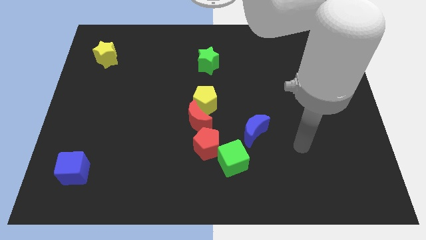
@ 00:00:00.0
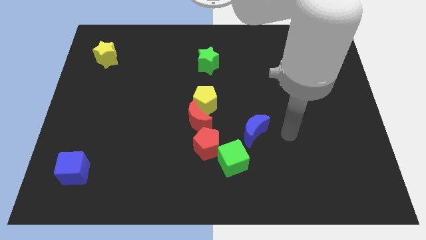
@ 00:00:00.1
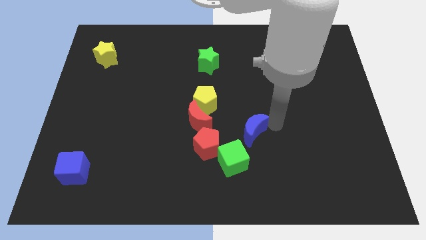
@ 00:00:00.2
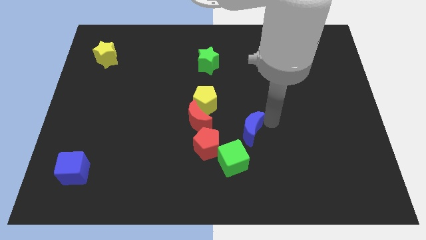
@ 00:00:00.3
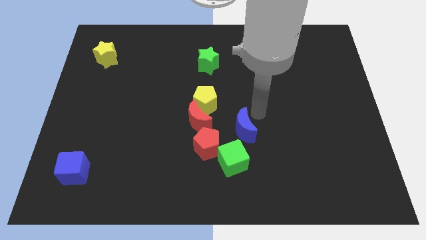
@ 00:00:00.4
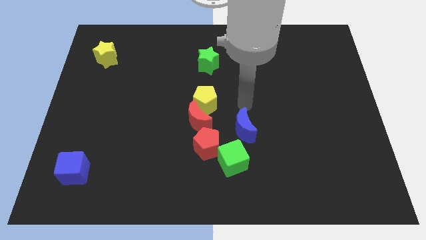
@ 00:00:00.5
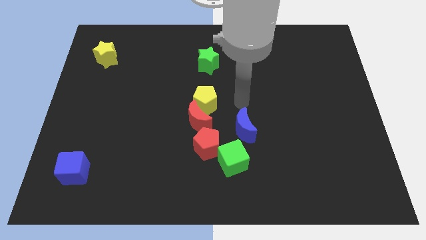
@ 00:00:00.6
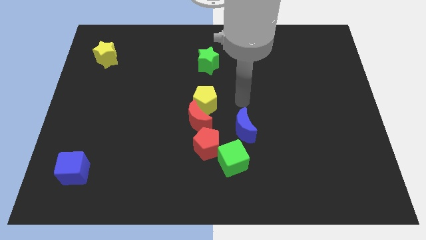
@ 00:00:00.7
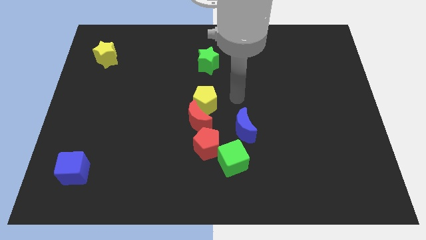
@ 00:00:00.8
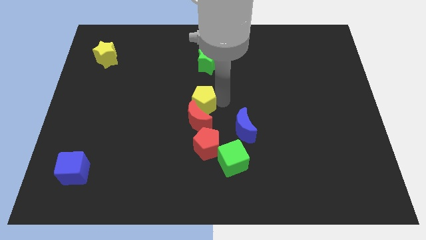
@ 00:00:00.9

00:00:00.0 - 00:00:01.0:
place the arm right to the yellow pentagon

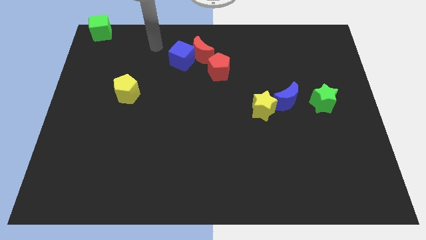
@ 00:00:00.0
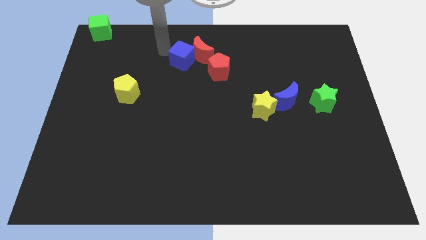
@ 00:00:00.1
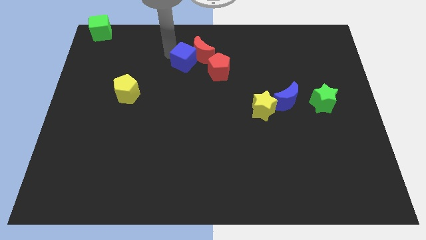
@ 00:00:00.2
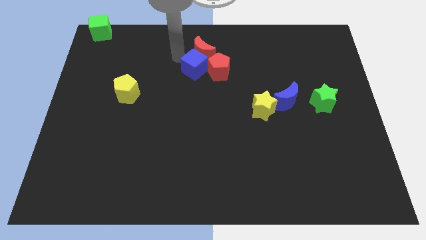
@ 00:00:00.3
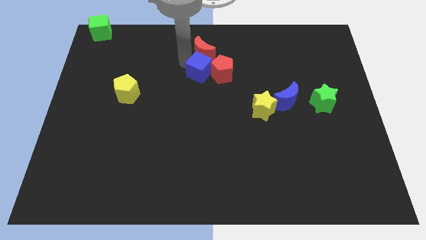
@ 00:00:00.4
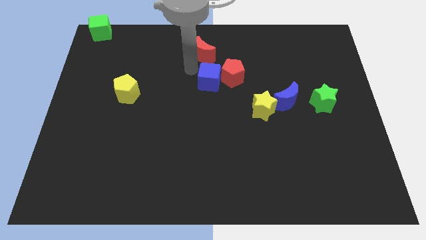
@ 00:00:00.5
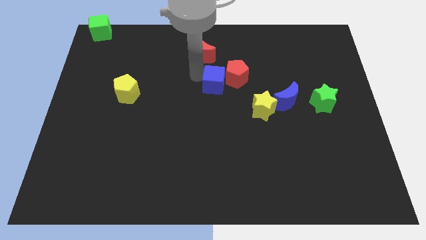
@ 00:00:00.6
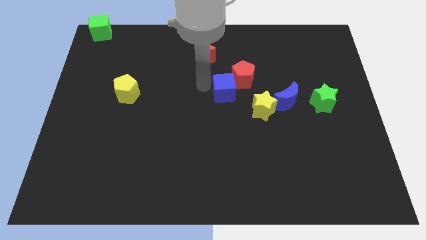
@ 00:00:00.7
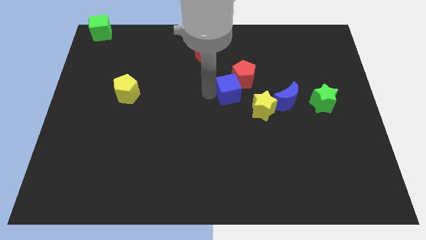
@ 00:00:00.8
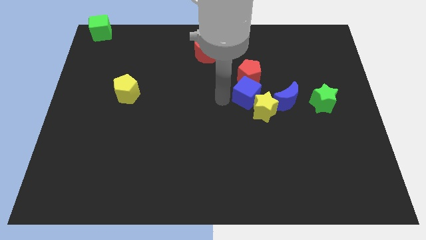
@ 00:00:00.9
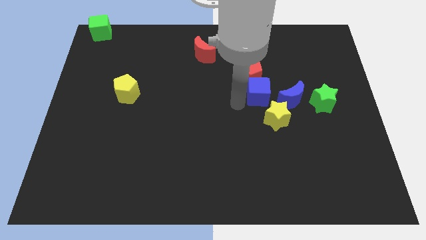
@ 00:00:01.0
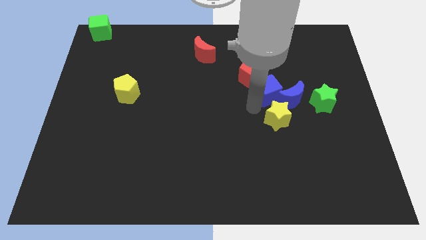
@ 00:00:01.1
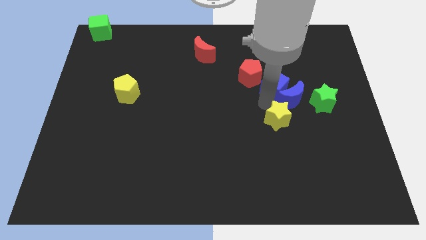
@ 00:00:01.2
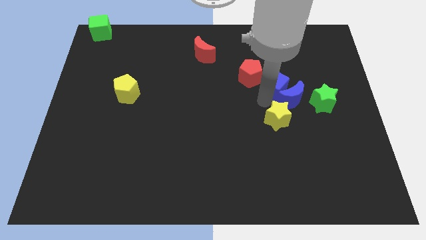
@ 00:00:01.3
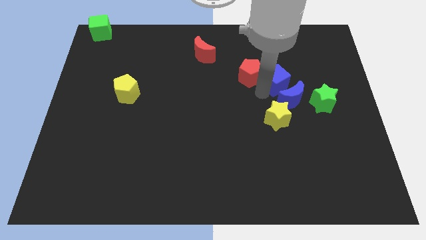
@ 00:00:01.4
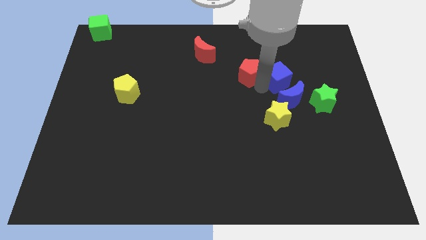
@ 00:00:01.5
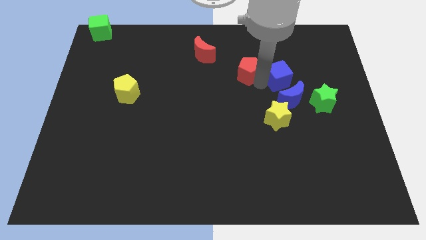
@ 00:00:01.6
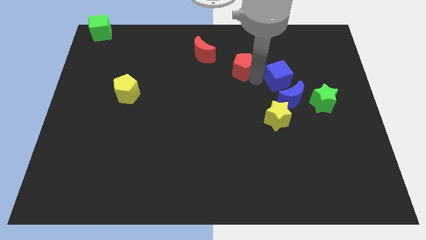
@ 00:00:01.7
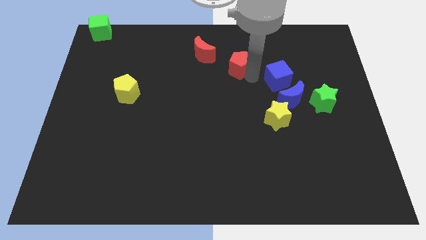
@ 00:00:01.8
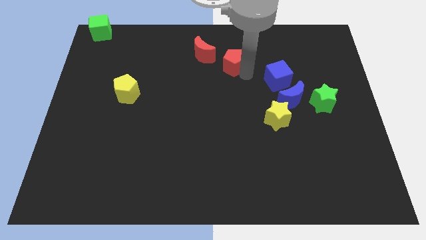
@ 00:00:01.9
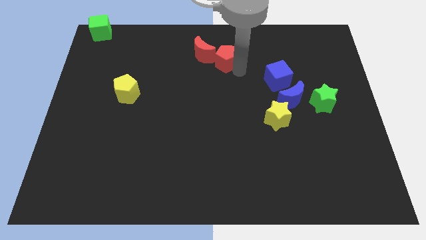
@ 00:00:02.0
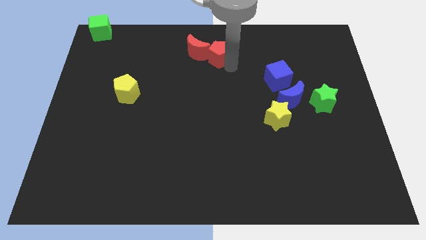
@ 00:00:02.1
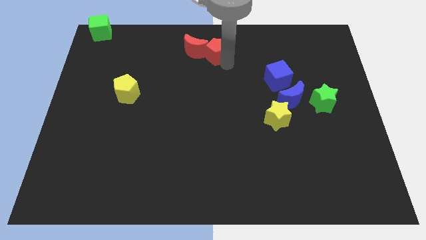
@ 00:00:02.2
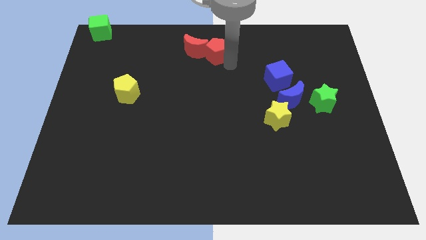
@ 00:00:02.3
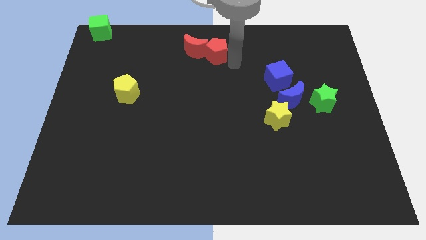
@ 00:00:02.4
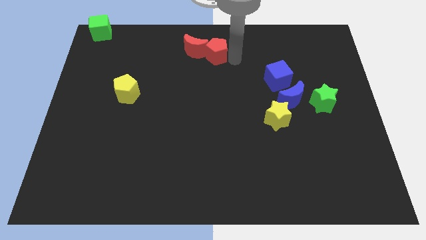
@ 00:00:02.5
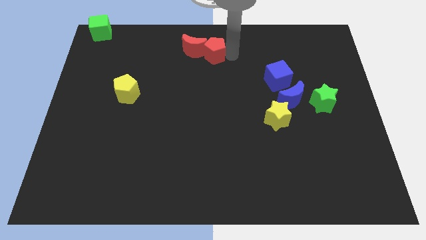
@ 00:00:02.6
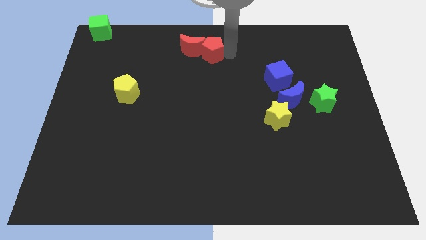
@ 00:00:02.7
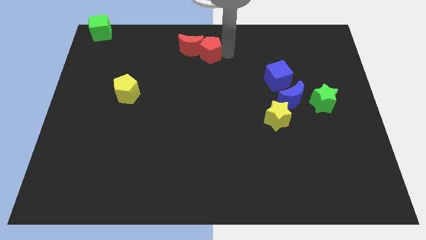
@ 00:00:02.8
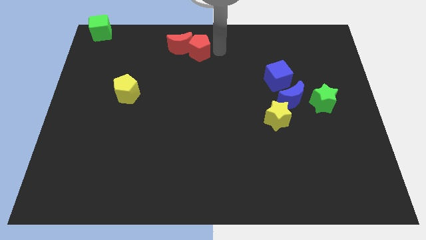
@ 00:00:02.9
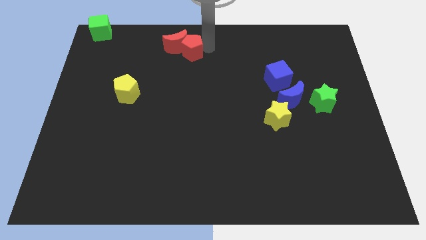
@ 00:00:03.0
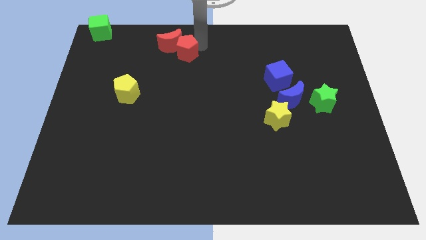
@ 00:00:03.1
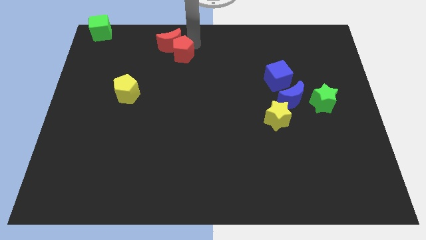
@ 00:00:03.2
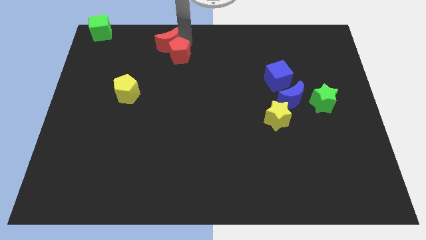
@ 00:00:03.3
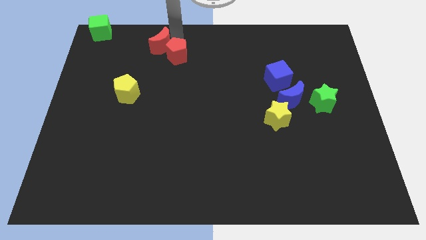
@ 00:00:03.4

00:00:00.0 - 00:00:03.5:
push the red blocks together at the top right side of the yellow pentagon

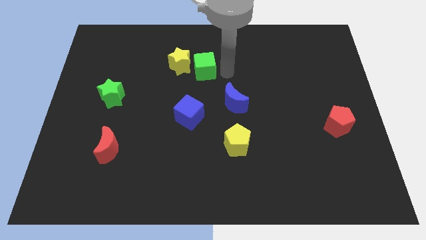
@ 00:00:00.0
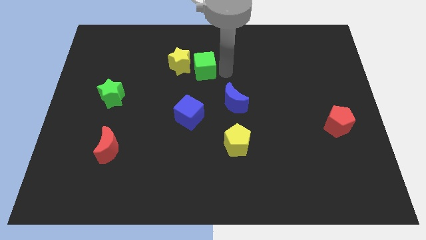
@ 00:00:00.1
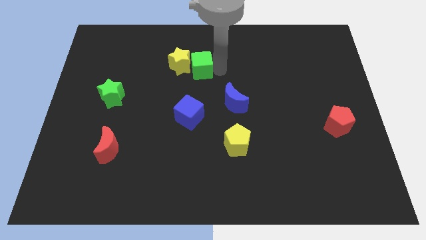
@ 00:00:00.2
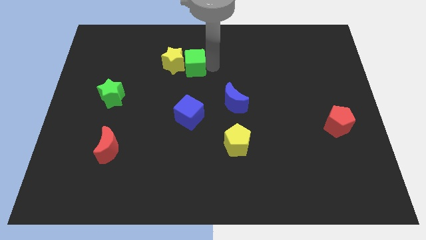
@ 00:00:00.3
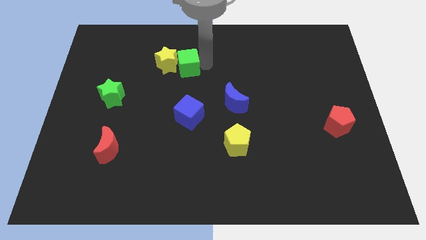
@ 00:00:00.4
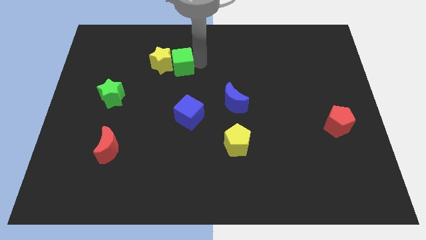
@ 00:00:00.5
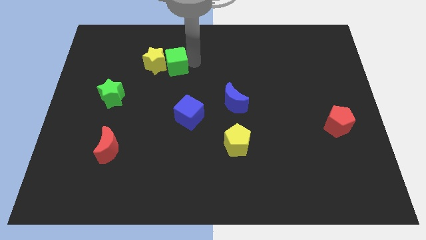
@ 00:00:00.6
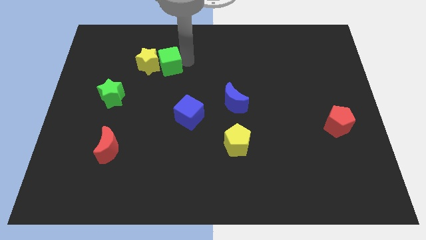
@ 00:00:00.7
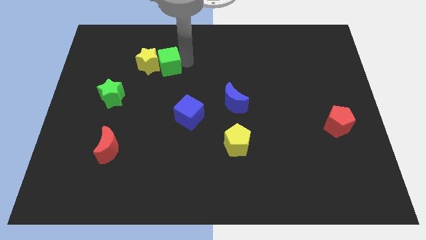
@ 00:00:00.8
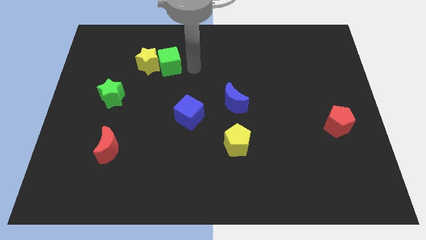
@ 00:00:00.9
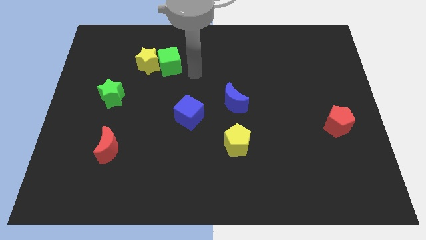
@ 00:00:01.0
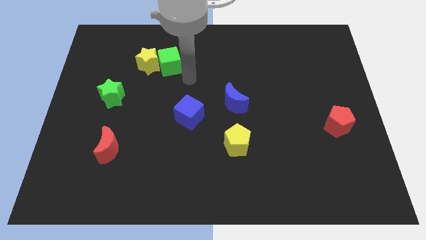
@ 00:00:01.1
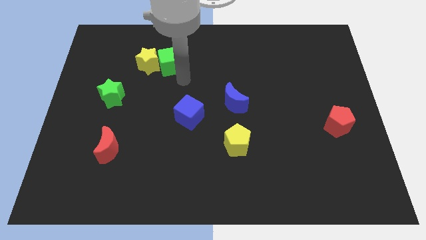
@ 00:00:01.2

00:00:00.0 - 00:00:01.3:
push the yellow star with a green cube towards the left

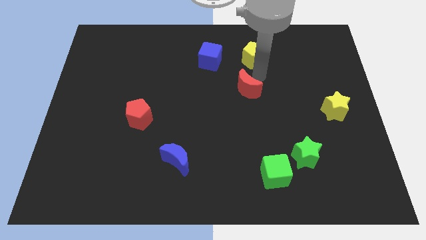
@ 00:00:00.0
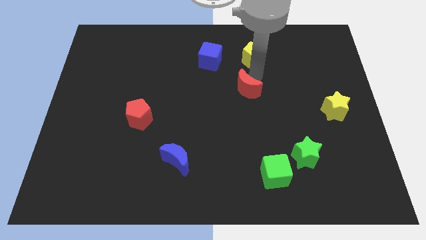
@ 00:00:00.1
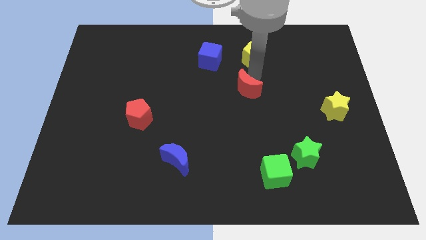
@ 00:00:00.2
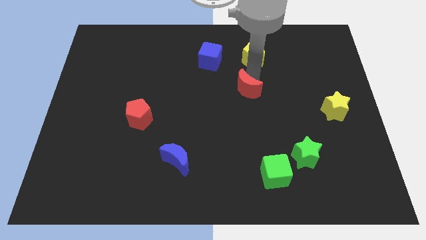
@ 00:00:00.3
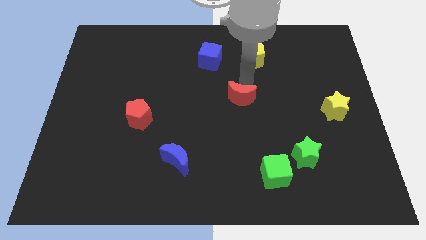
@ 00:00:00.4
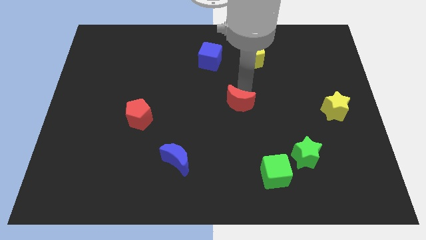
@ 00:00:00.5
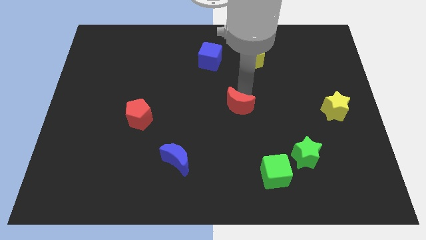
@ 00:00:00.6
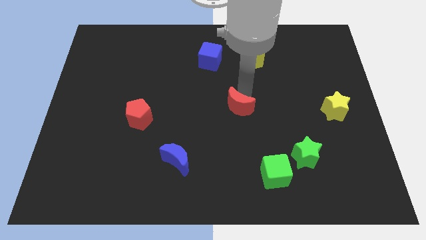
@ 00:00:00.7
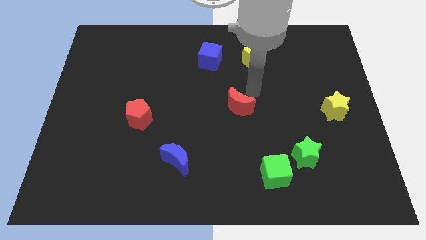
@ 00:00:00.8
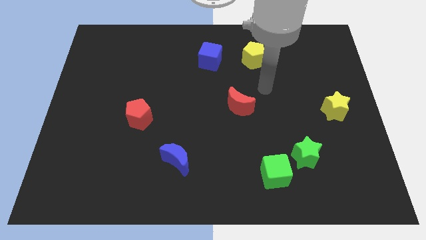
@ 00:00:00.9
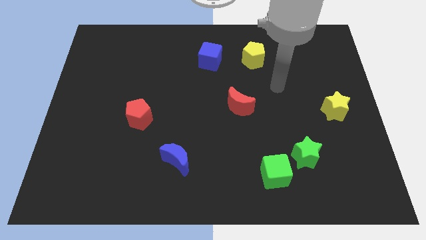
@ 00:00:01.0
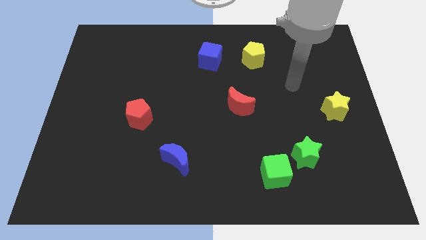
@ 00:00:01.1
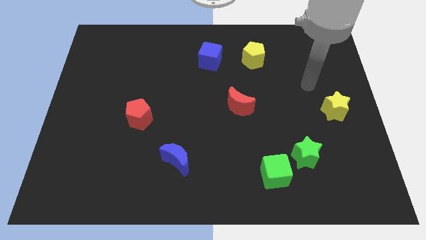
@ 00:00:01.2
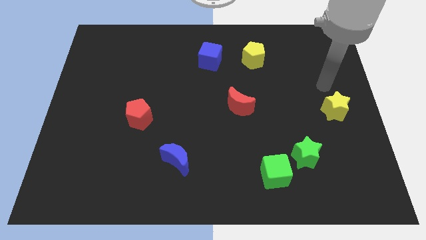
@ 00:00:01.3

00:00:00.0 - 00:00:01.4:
push the red moon to the center of the board

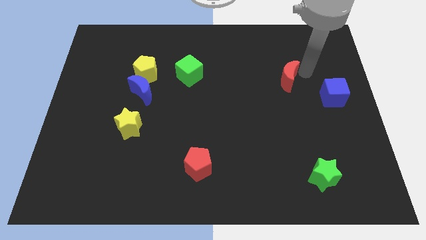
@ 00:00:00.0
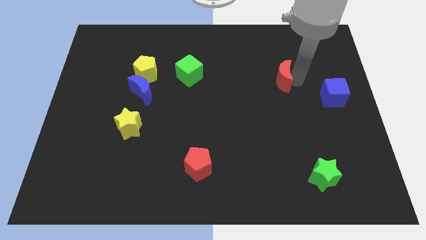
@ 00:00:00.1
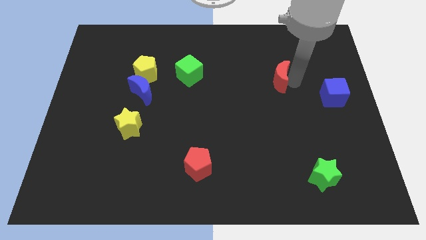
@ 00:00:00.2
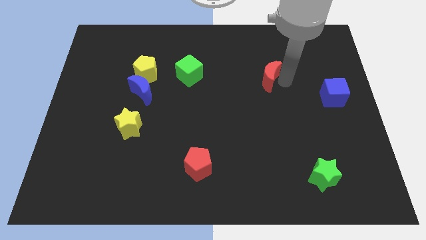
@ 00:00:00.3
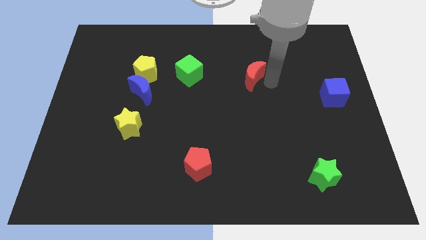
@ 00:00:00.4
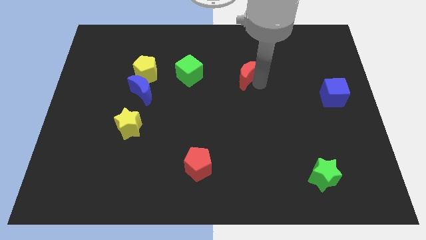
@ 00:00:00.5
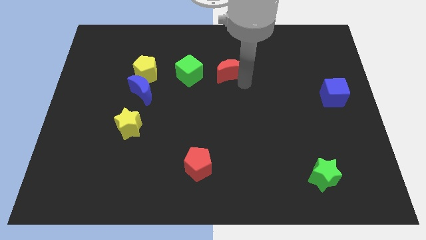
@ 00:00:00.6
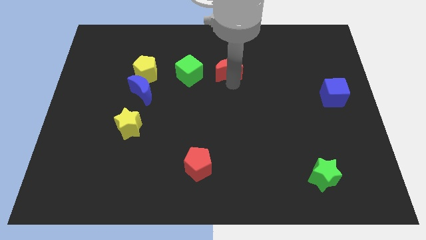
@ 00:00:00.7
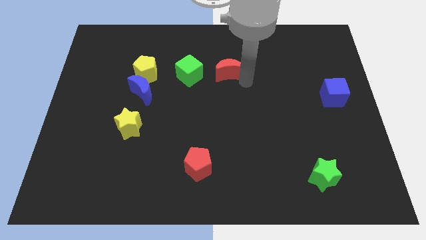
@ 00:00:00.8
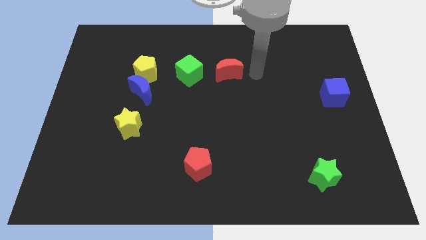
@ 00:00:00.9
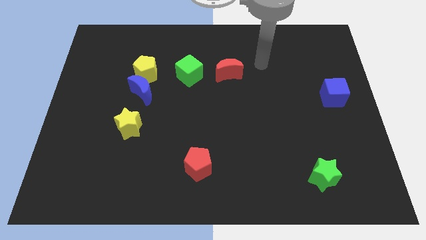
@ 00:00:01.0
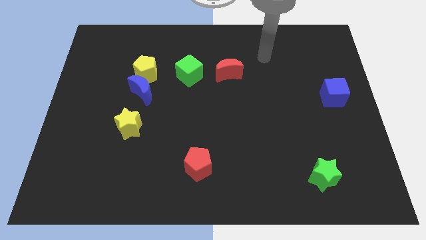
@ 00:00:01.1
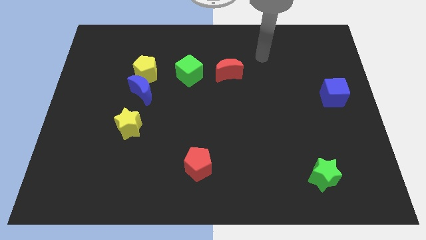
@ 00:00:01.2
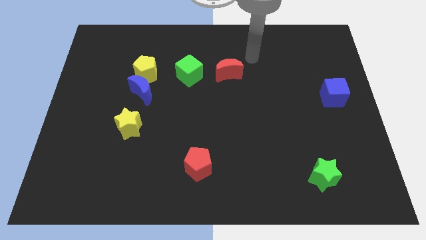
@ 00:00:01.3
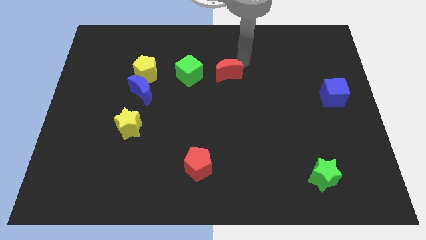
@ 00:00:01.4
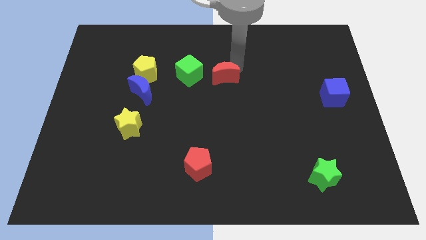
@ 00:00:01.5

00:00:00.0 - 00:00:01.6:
move the red moon to the right of the green cube

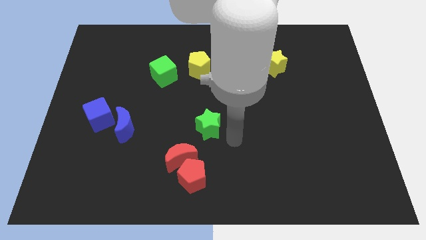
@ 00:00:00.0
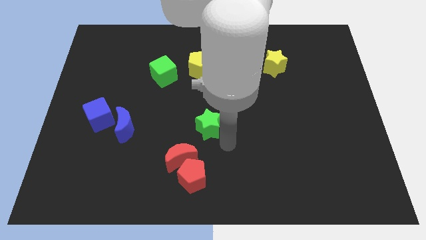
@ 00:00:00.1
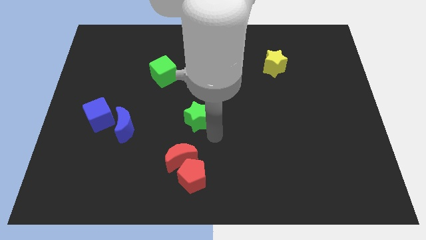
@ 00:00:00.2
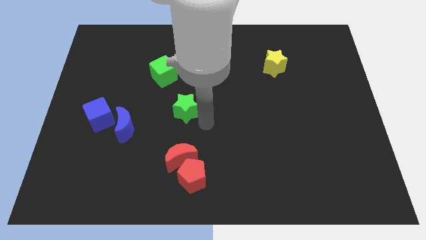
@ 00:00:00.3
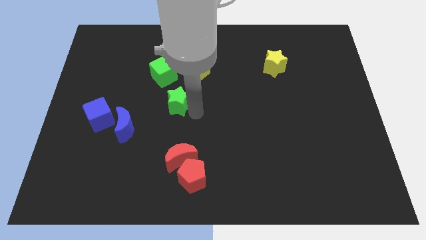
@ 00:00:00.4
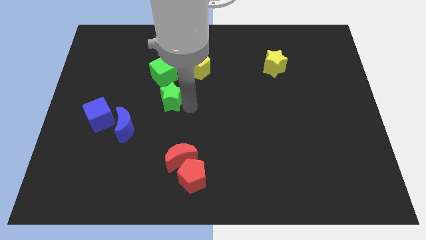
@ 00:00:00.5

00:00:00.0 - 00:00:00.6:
push the green star towards the green cube
